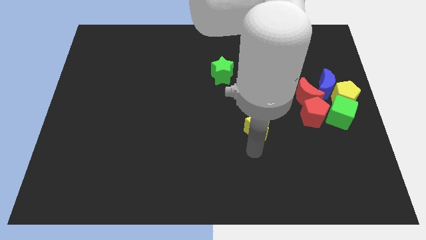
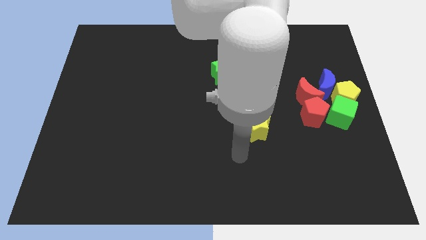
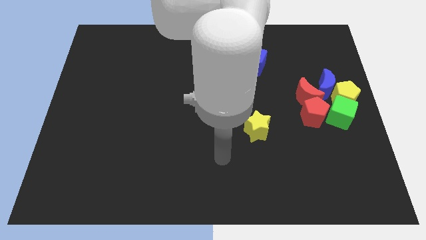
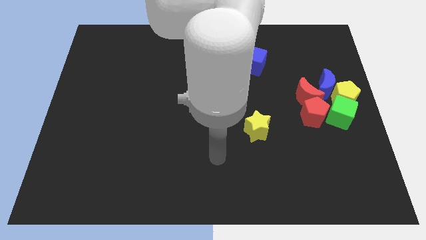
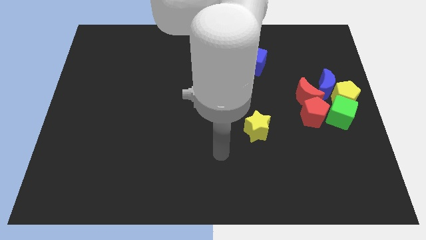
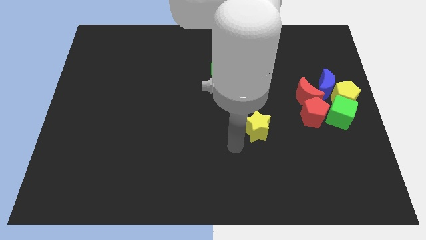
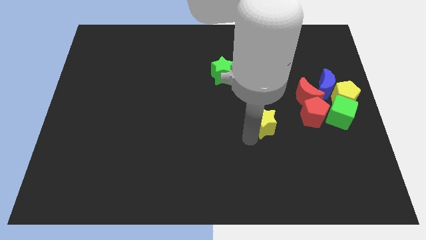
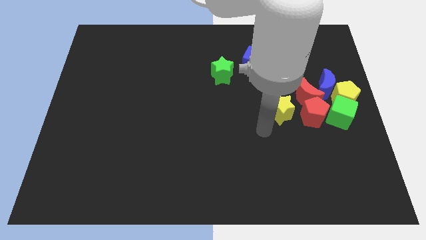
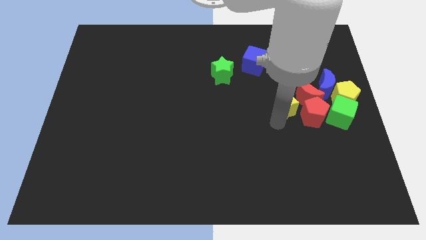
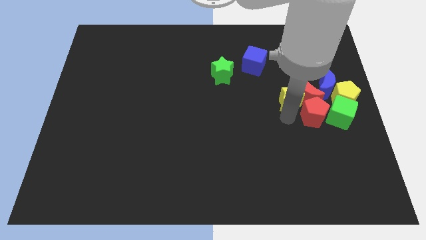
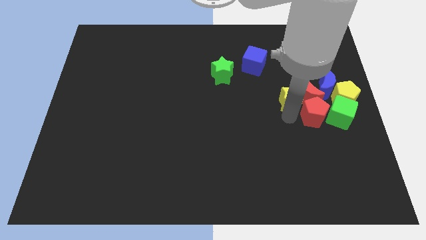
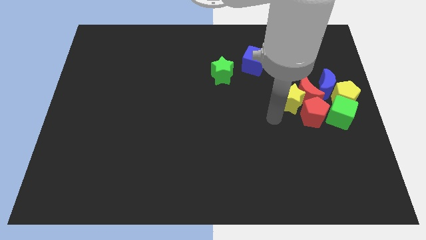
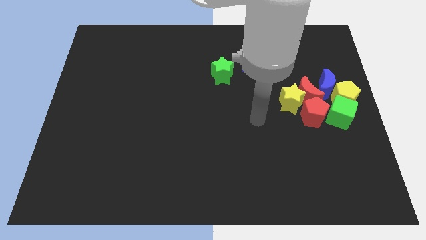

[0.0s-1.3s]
move the yellow star to the left of the red moon

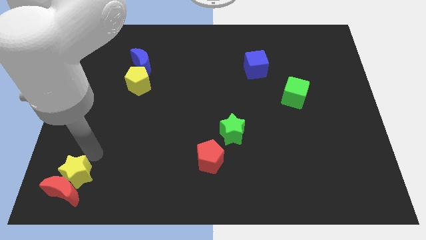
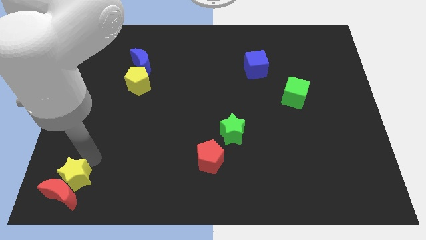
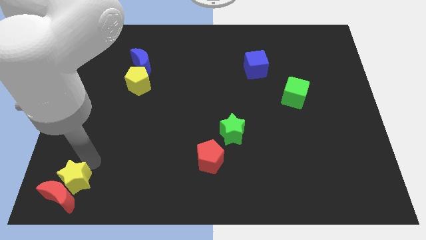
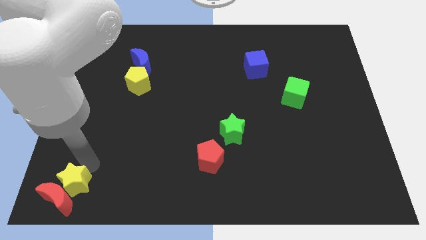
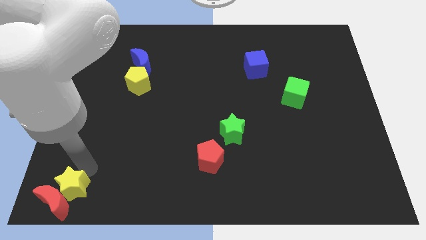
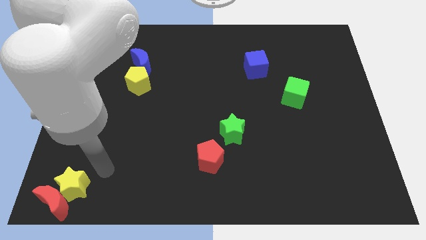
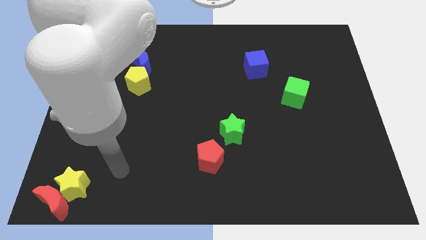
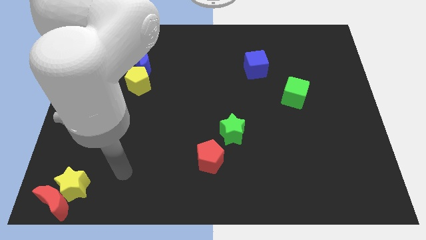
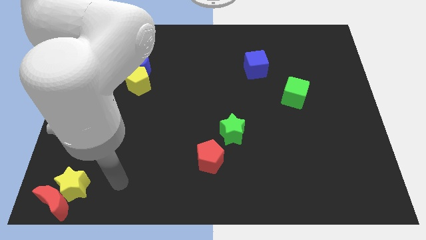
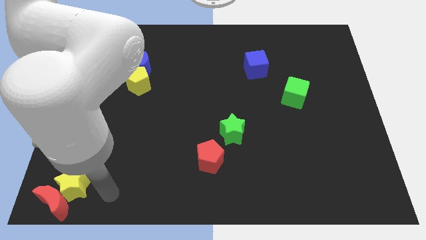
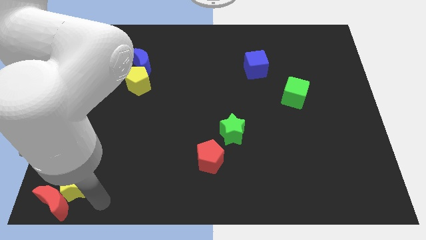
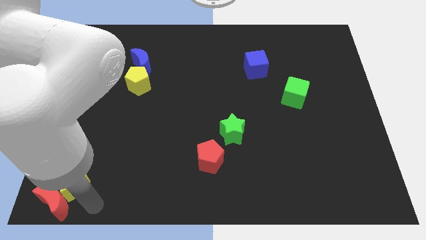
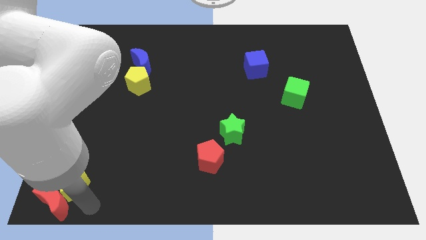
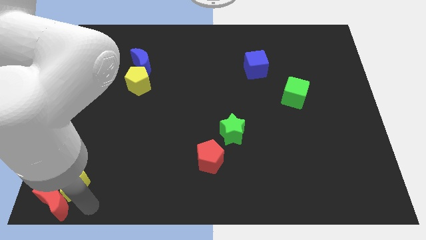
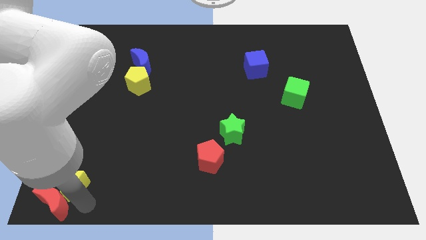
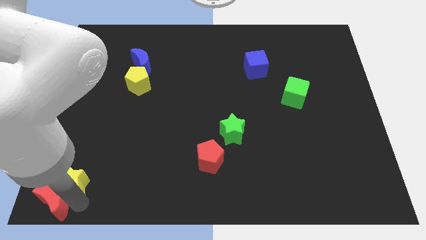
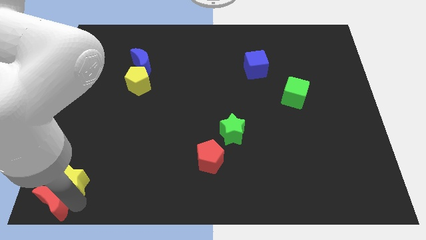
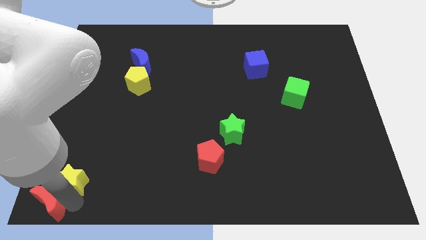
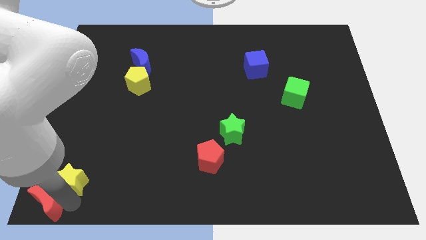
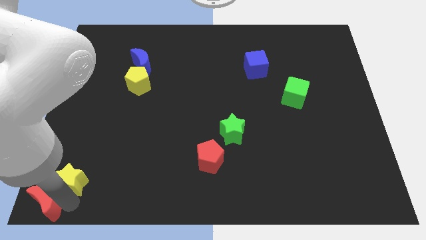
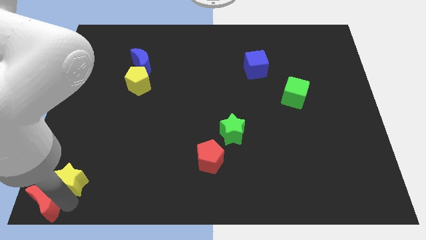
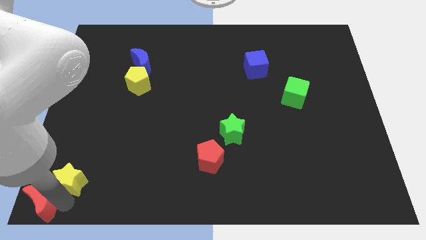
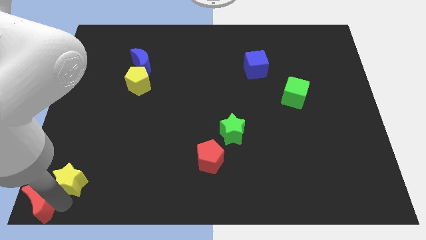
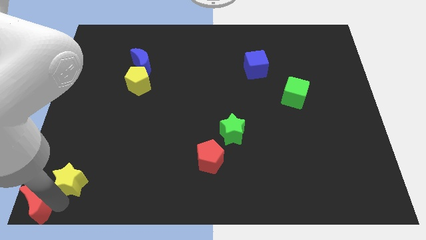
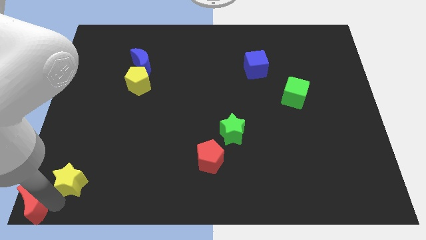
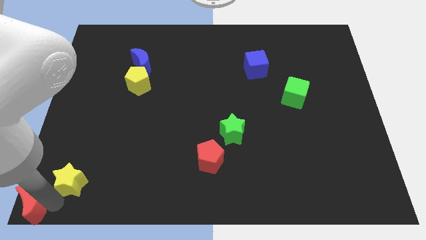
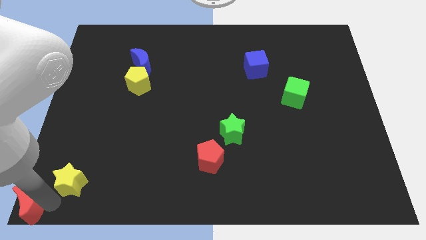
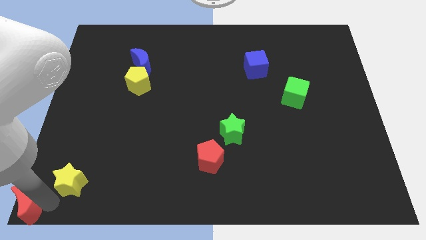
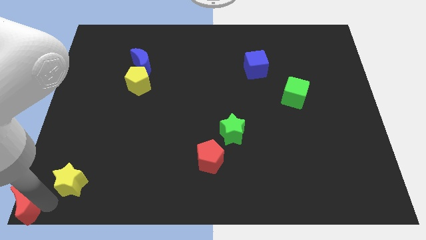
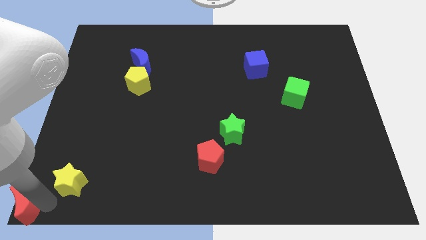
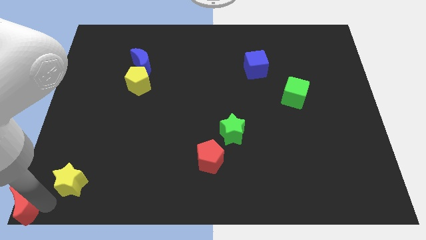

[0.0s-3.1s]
push red moon to the bottom left corner

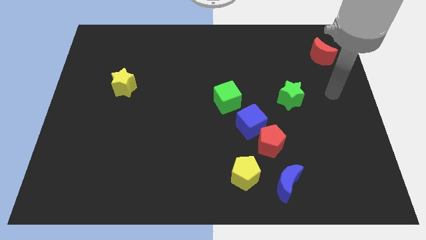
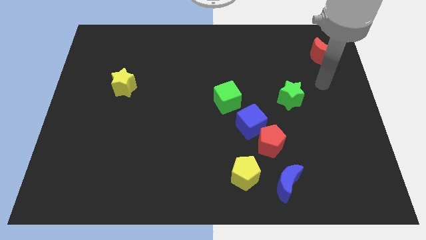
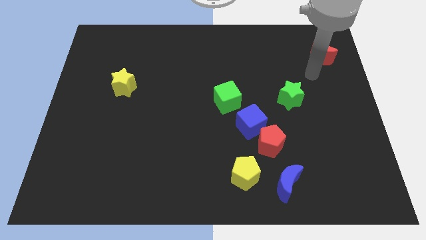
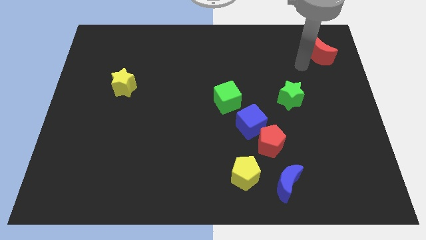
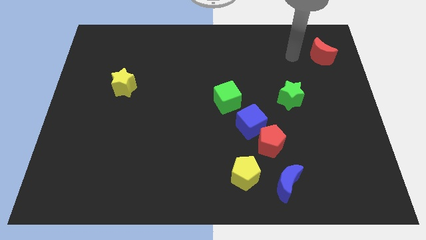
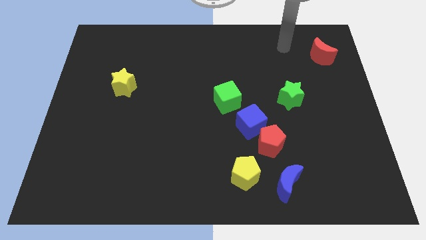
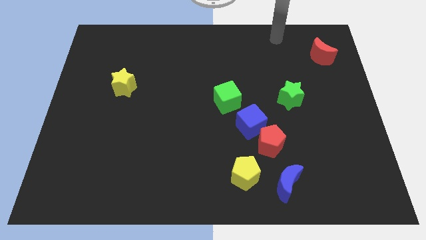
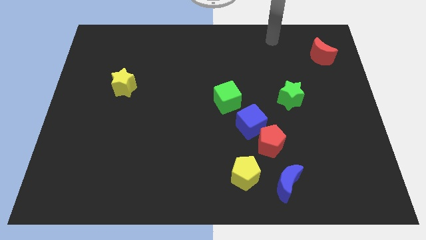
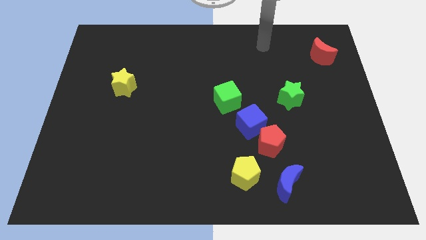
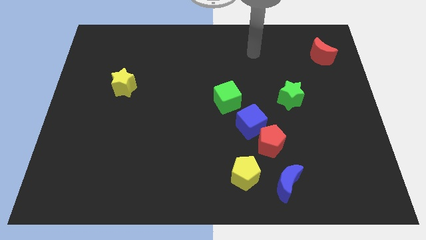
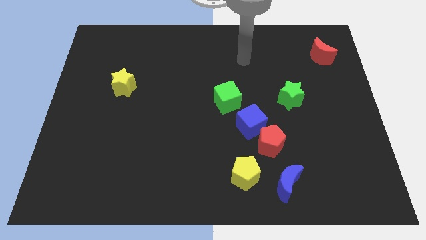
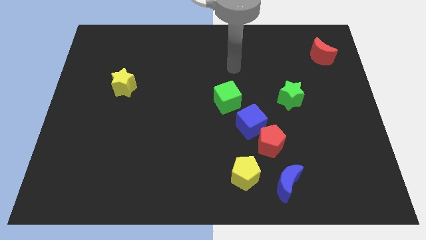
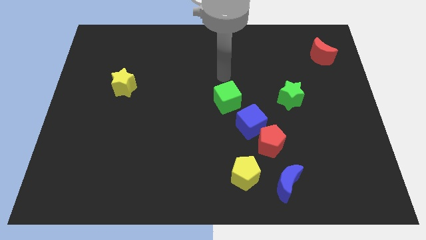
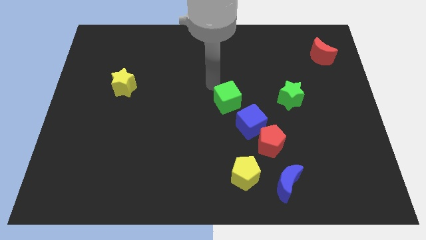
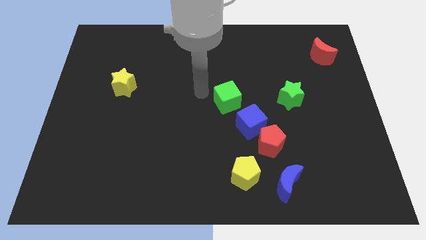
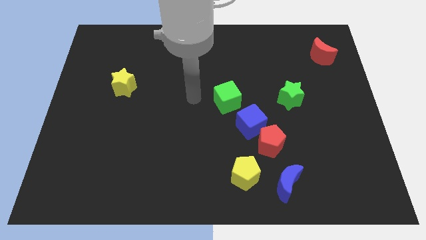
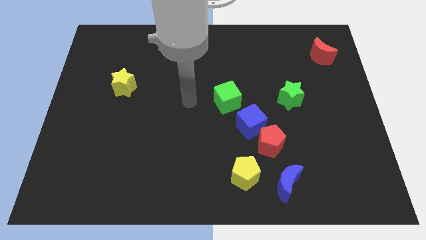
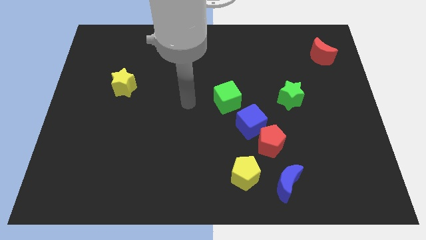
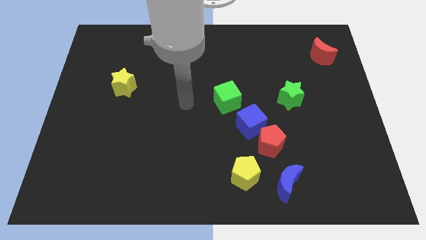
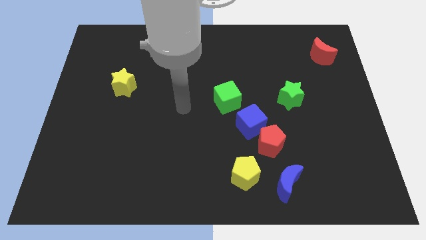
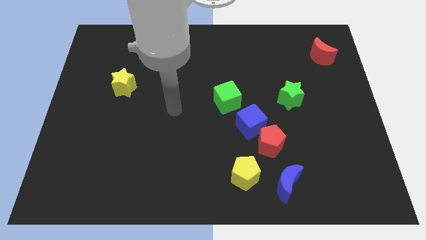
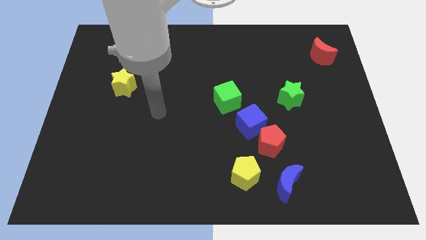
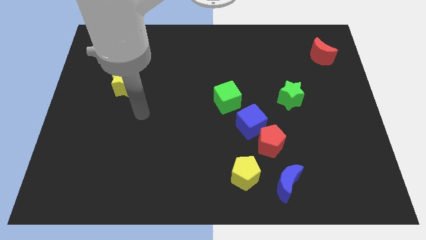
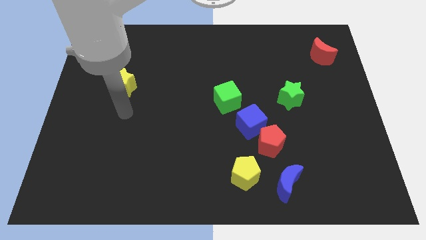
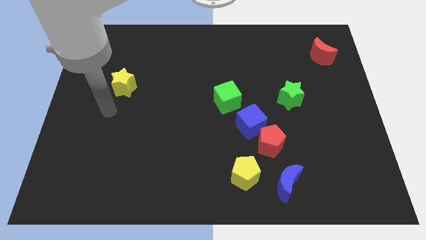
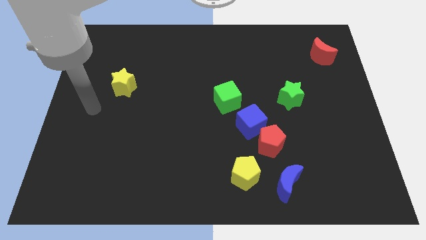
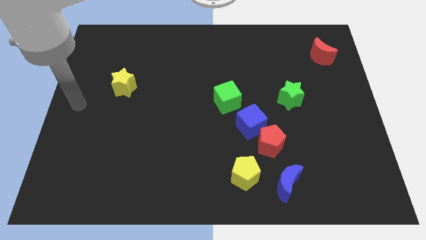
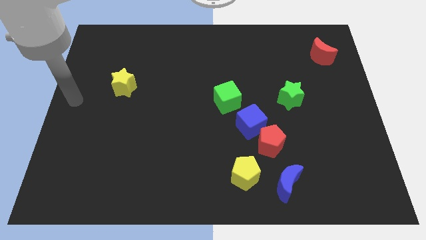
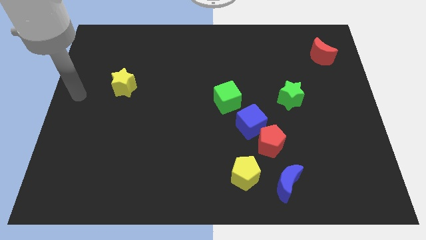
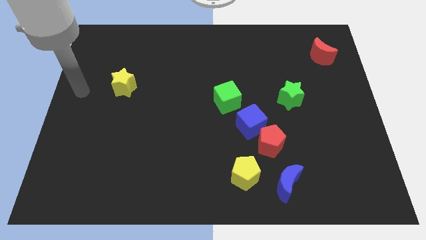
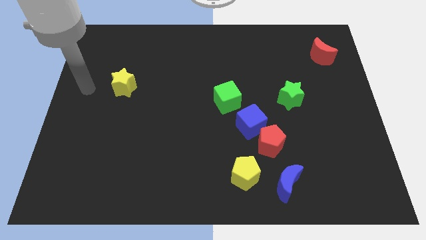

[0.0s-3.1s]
slide your arm to the left of yellow star

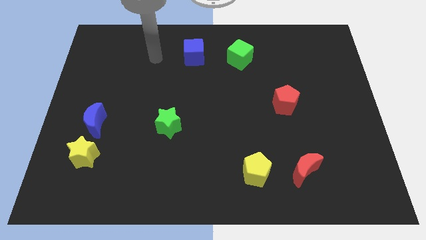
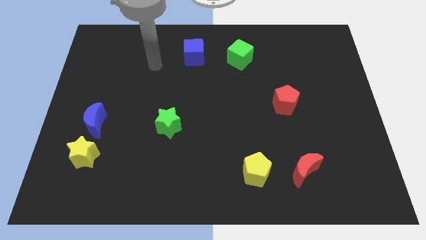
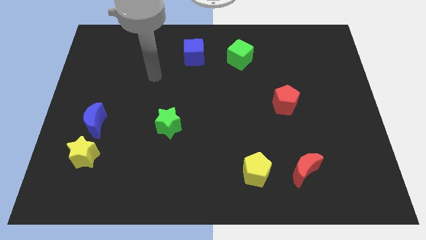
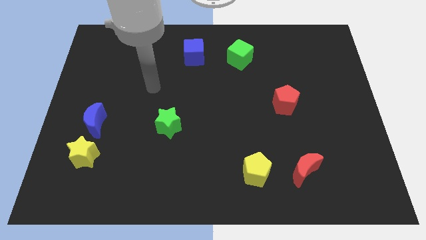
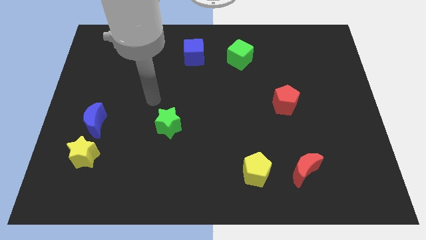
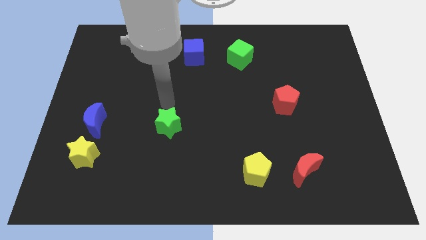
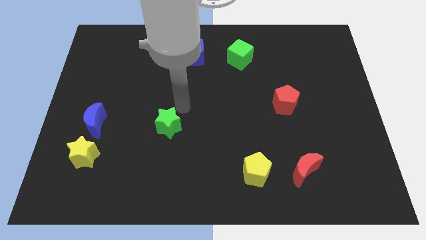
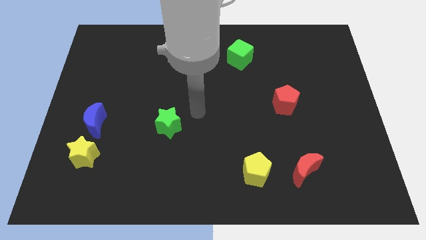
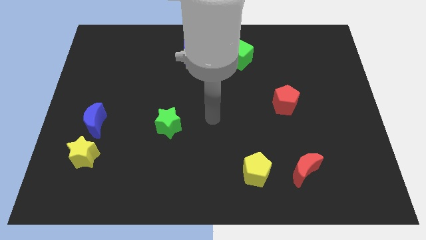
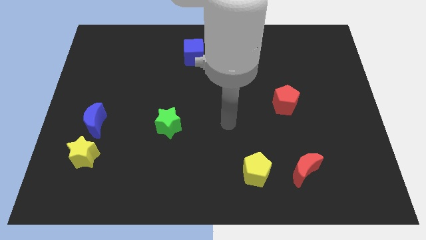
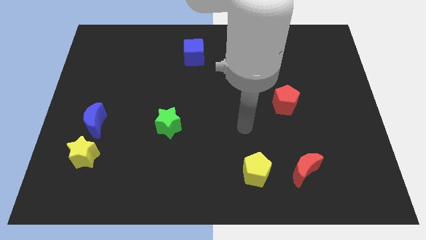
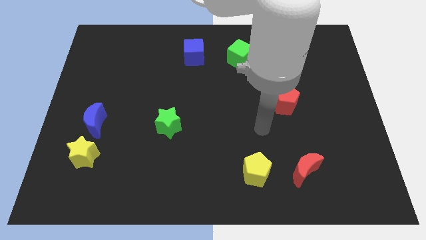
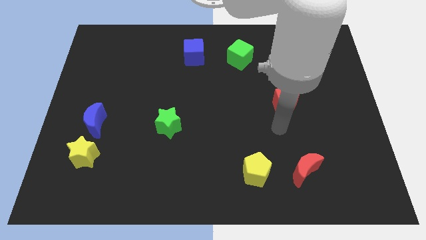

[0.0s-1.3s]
place yourself above the yellow pentagon

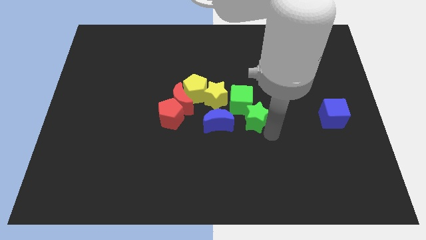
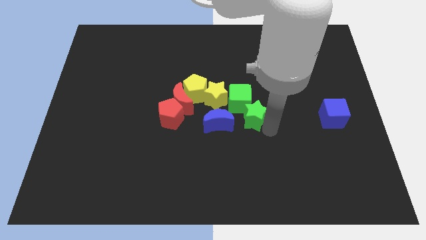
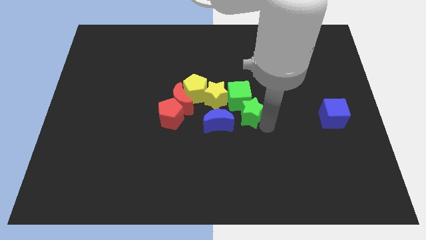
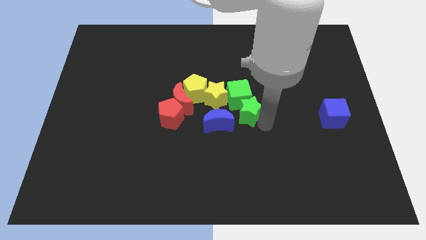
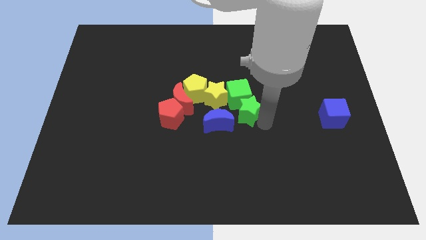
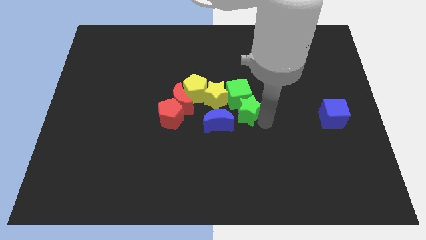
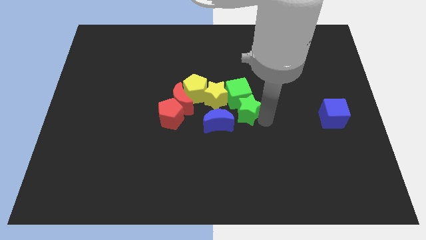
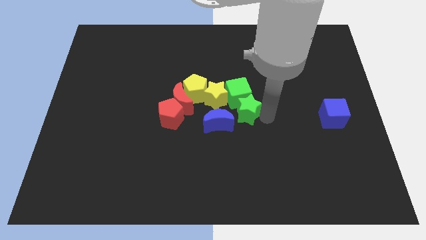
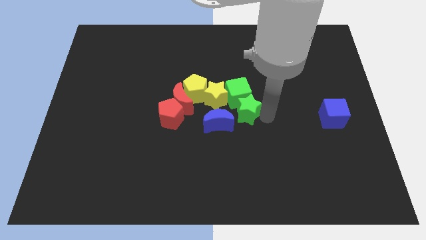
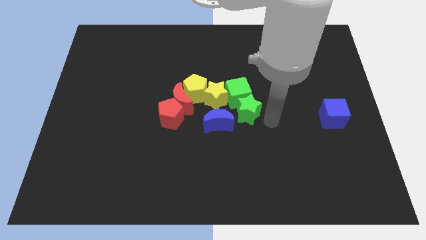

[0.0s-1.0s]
place the green star to the bottom of the green cube on the board
